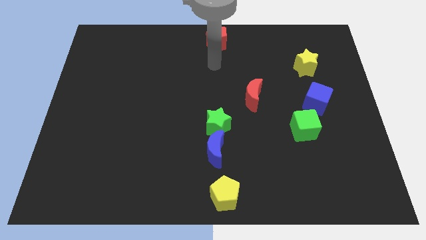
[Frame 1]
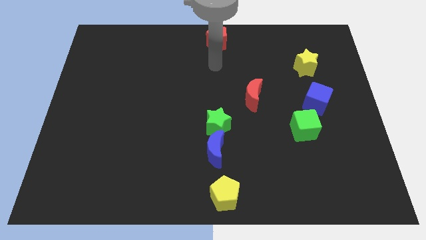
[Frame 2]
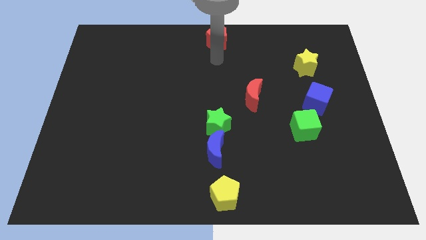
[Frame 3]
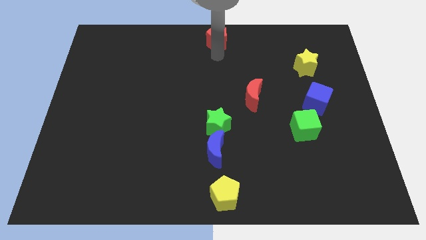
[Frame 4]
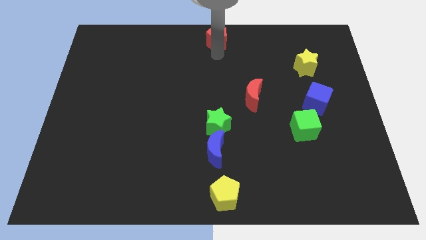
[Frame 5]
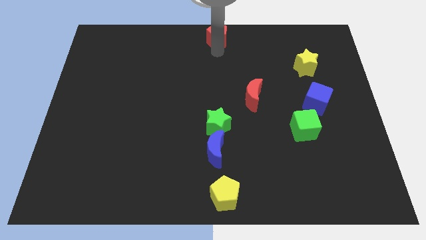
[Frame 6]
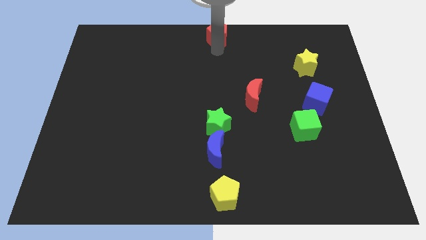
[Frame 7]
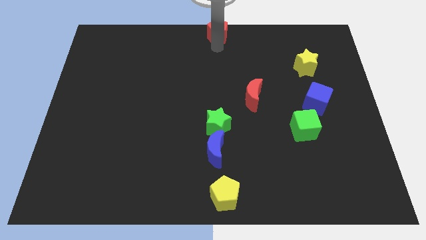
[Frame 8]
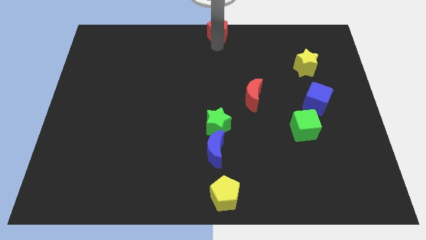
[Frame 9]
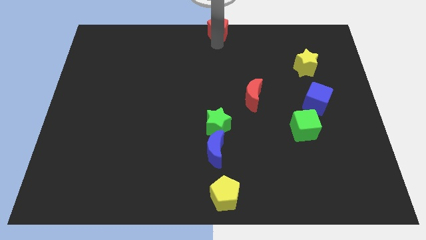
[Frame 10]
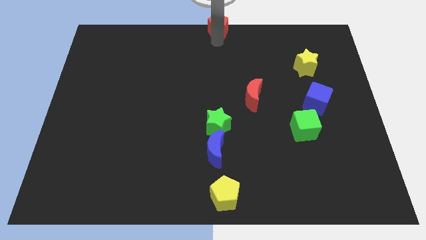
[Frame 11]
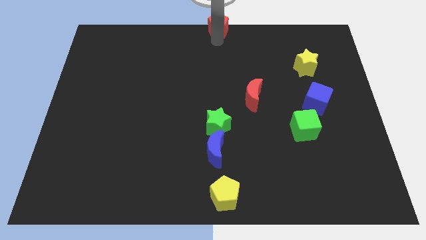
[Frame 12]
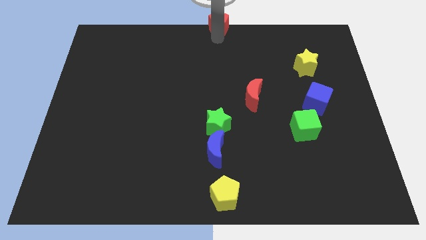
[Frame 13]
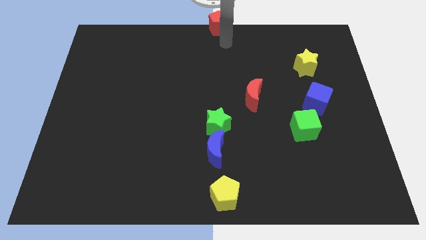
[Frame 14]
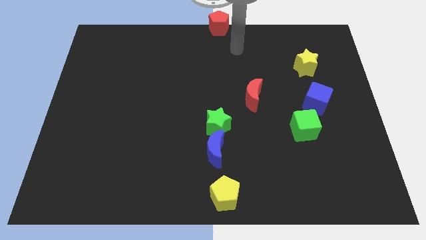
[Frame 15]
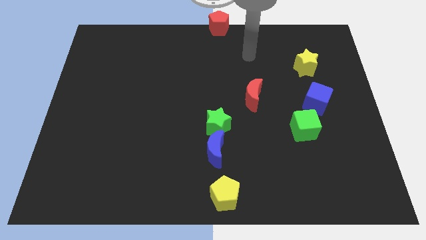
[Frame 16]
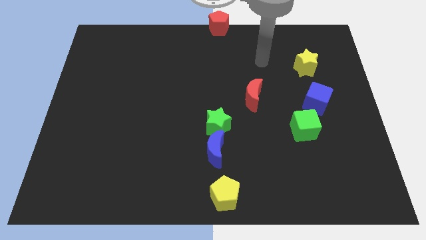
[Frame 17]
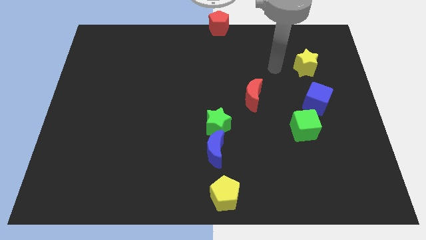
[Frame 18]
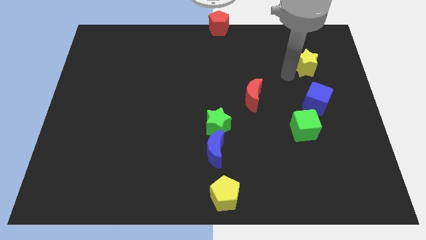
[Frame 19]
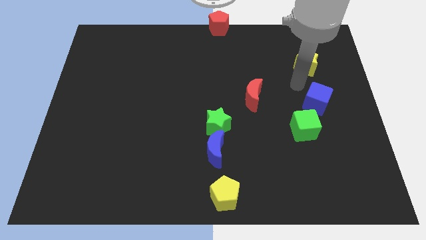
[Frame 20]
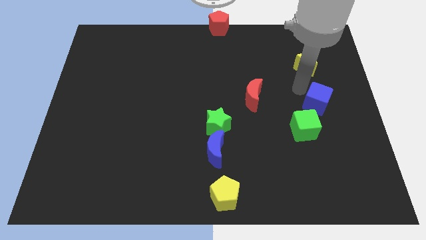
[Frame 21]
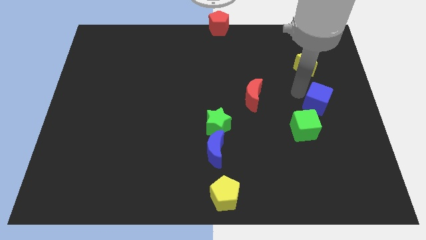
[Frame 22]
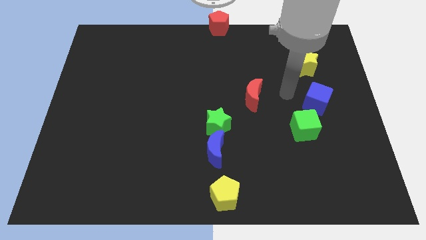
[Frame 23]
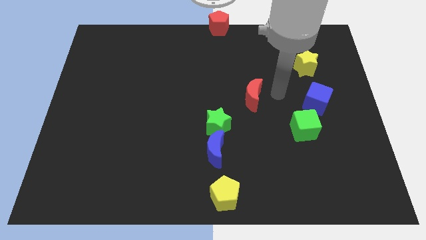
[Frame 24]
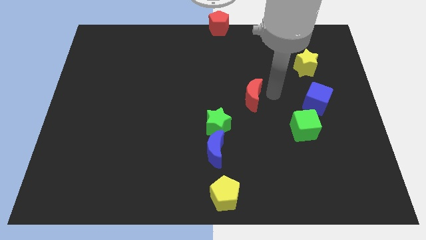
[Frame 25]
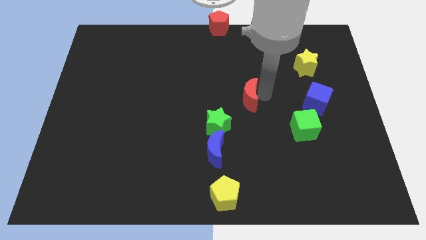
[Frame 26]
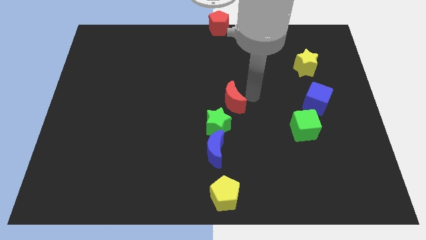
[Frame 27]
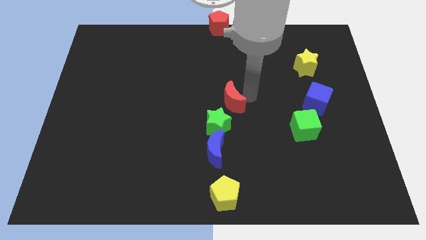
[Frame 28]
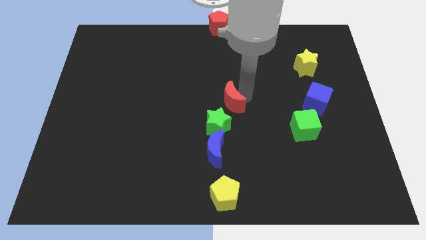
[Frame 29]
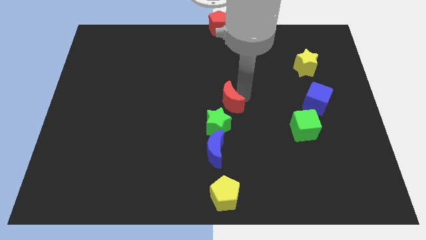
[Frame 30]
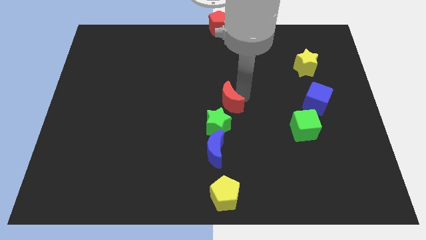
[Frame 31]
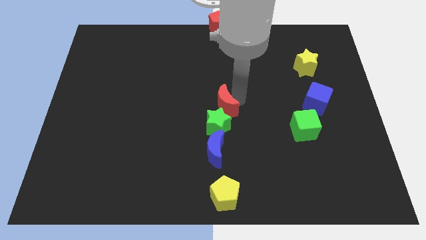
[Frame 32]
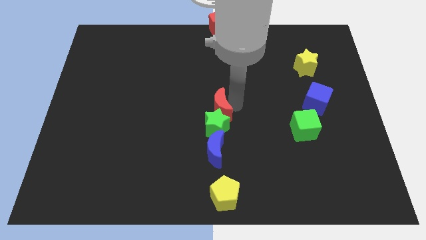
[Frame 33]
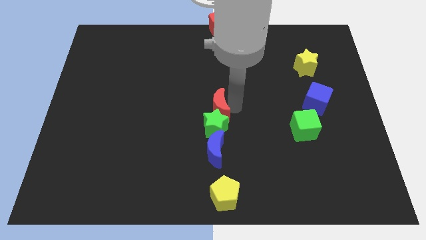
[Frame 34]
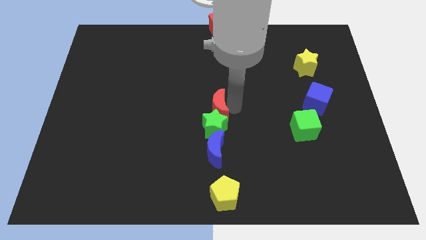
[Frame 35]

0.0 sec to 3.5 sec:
move the red moon into the green star

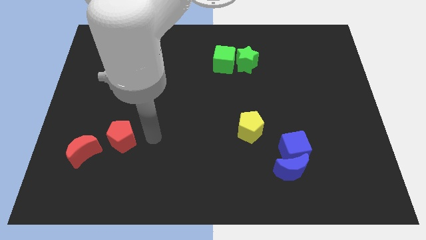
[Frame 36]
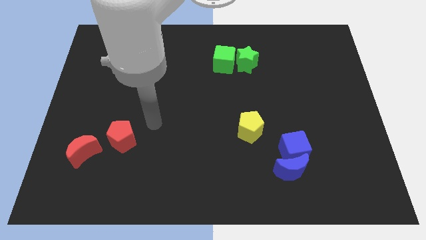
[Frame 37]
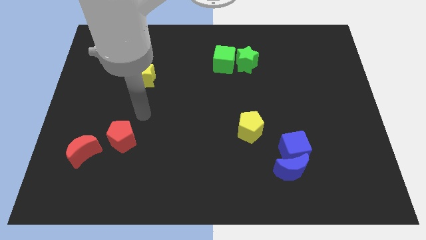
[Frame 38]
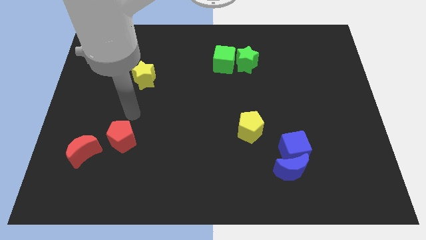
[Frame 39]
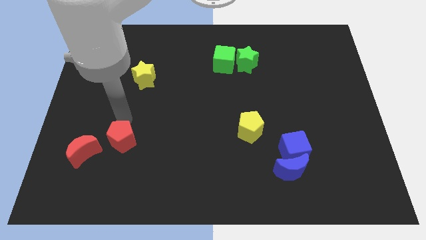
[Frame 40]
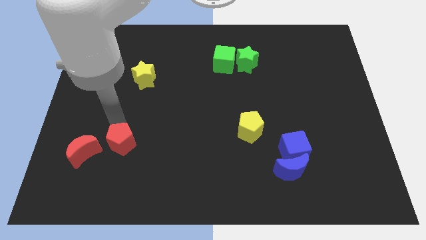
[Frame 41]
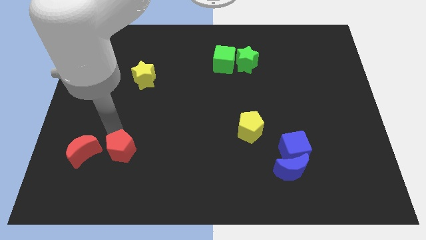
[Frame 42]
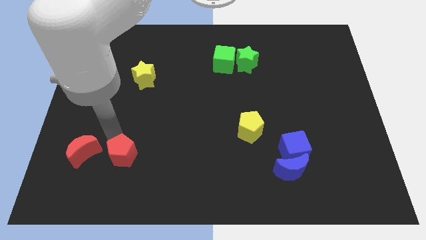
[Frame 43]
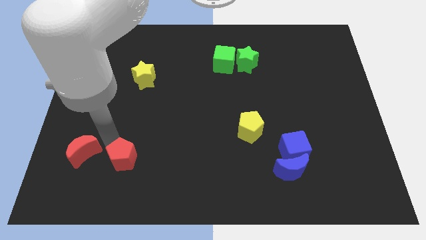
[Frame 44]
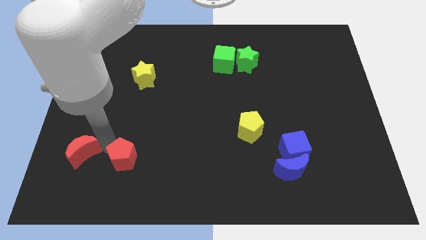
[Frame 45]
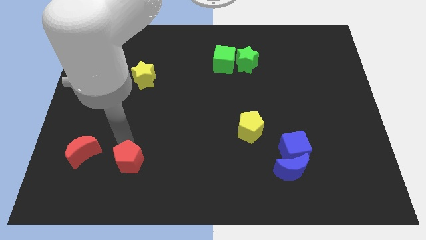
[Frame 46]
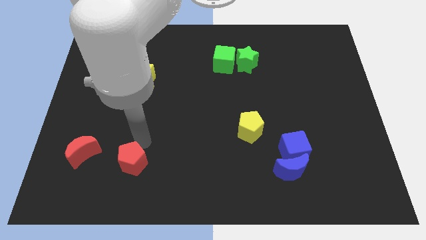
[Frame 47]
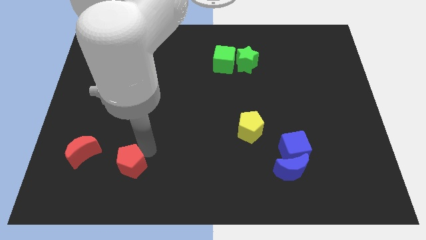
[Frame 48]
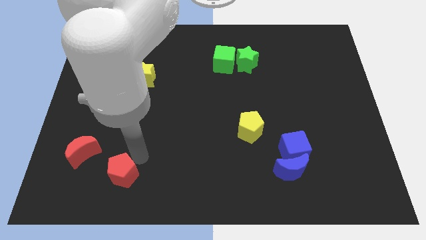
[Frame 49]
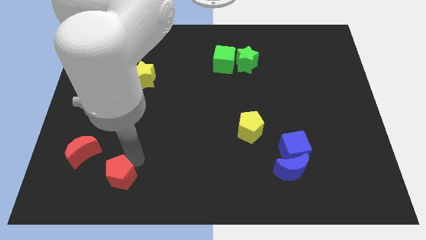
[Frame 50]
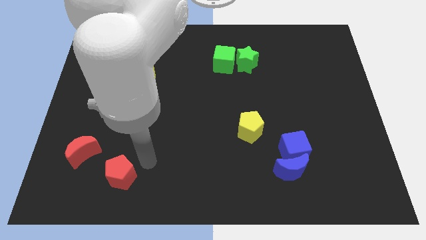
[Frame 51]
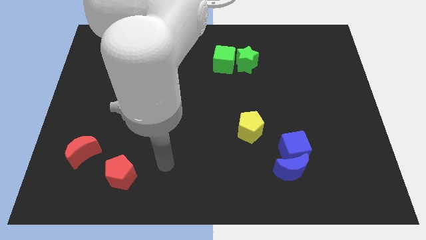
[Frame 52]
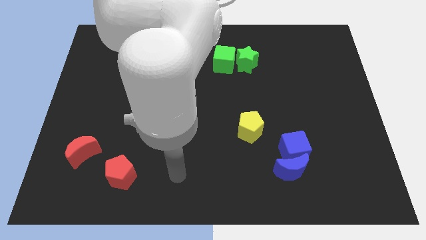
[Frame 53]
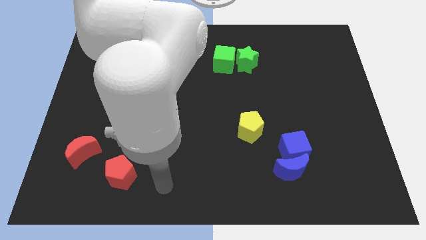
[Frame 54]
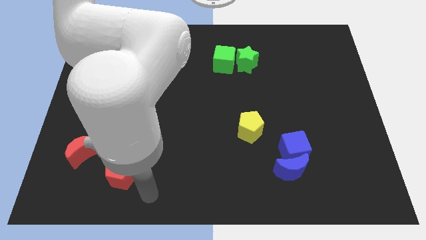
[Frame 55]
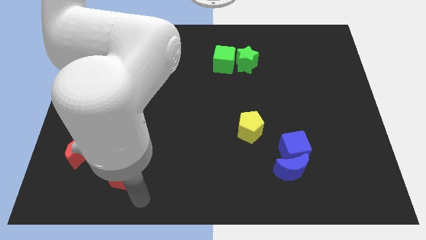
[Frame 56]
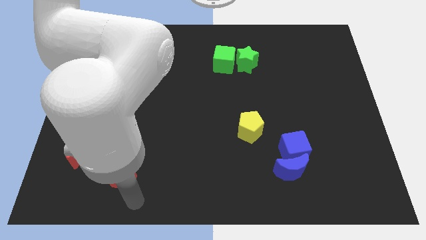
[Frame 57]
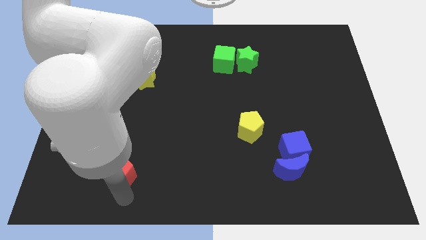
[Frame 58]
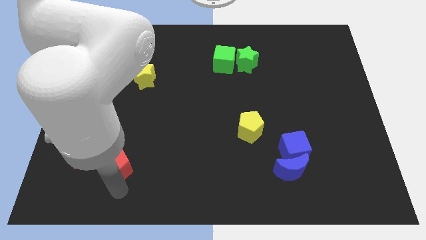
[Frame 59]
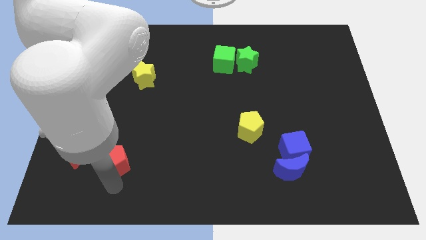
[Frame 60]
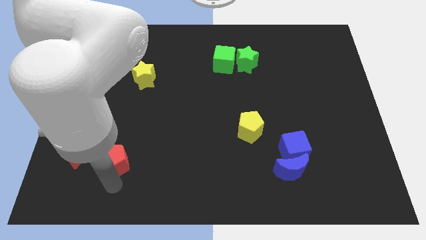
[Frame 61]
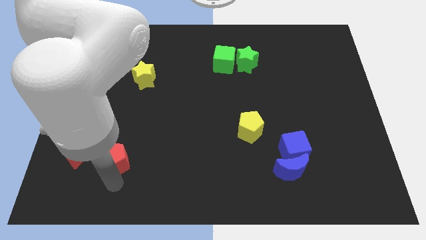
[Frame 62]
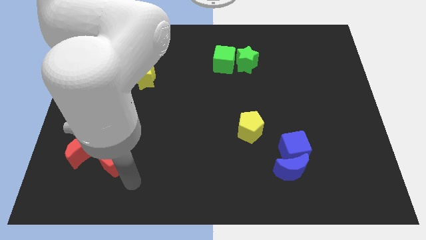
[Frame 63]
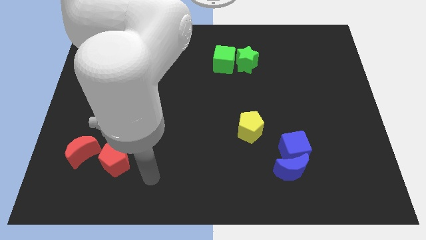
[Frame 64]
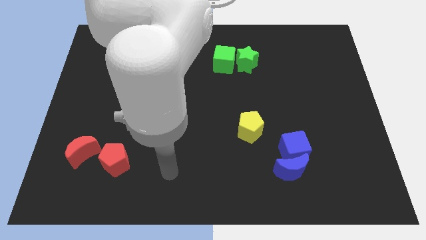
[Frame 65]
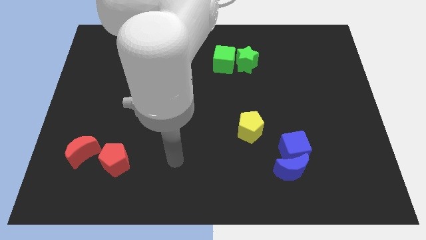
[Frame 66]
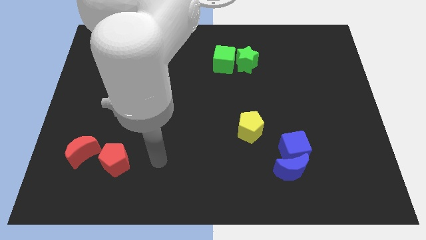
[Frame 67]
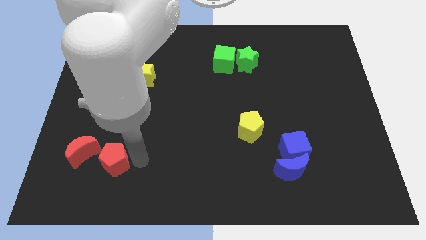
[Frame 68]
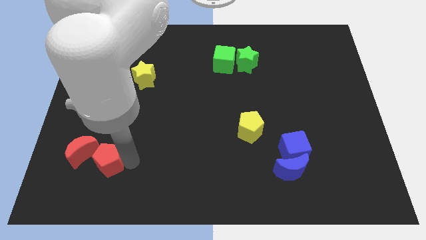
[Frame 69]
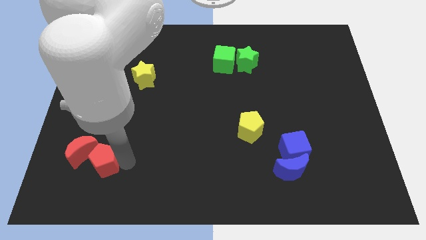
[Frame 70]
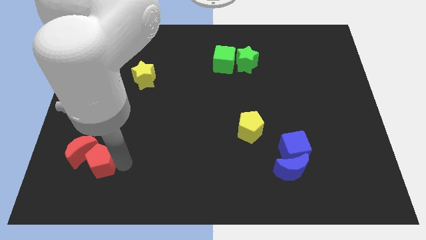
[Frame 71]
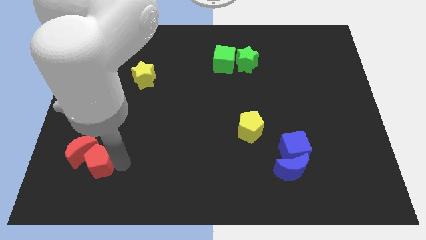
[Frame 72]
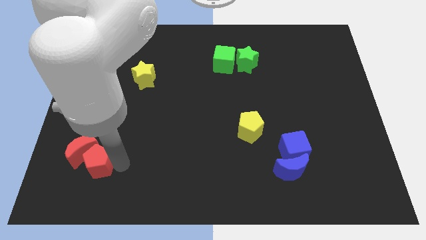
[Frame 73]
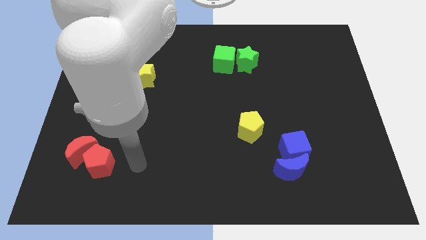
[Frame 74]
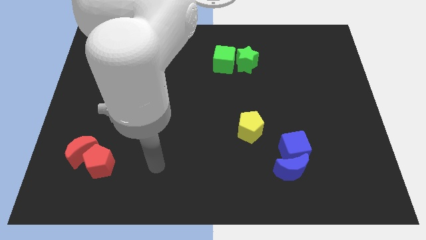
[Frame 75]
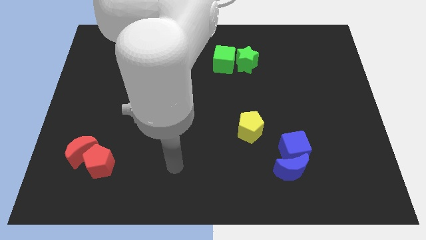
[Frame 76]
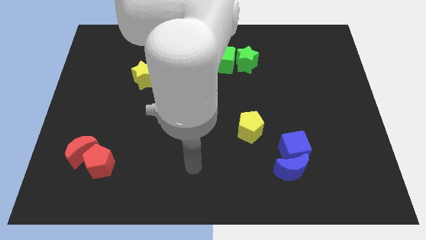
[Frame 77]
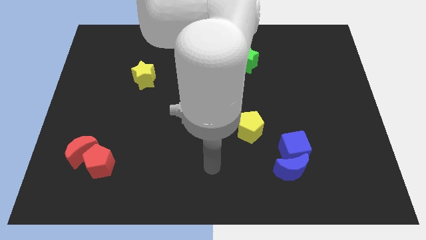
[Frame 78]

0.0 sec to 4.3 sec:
move the red pentagon below the red moon

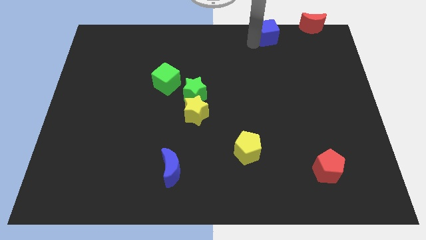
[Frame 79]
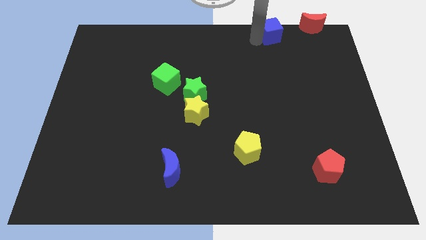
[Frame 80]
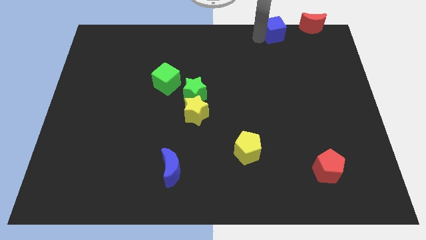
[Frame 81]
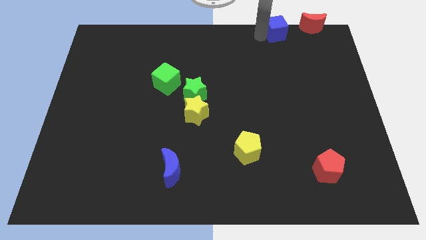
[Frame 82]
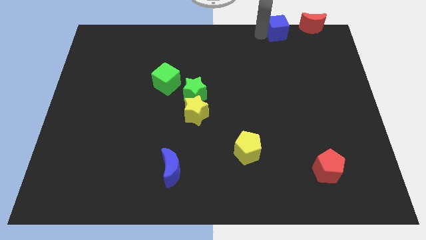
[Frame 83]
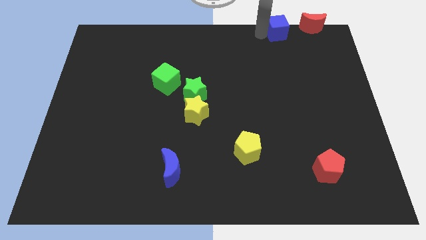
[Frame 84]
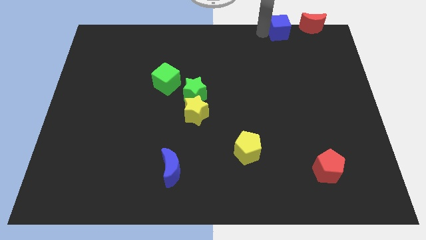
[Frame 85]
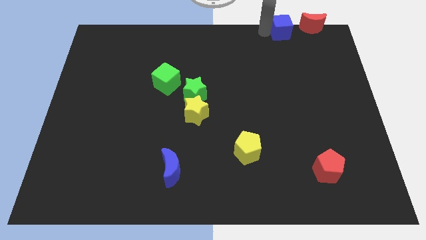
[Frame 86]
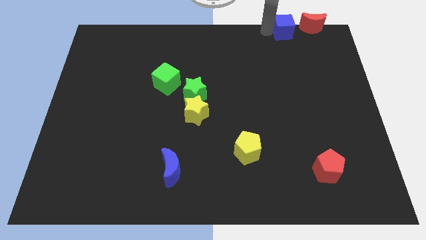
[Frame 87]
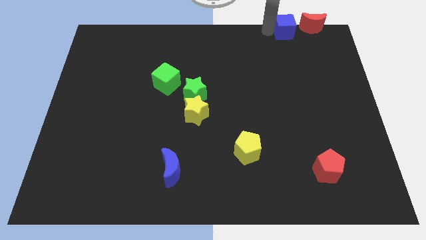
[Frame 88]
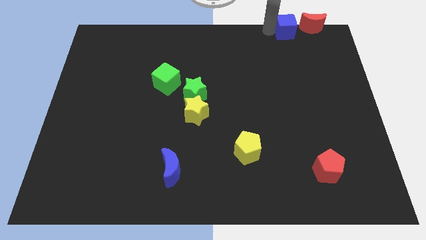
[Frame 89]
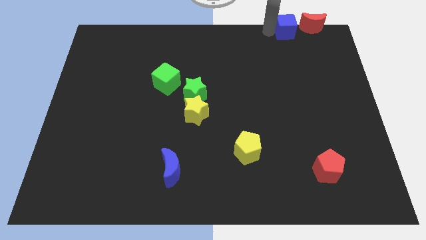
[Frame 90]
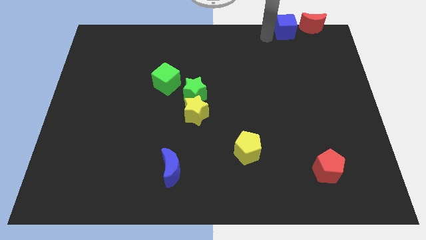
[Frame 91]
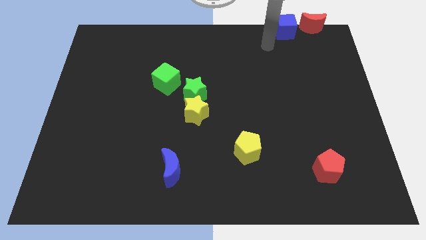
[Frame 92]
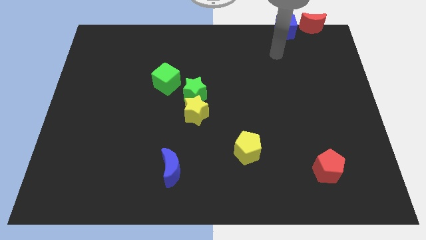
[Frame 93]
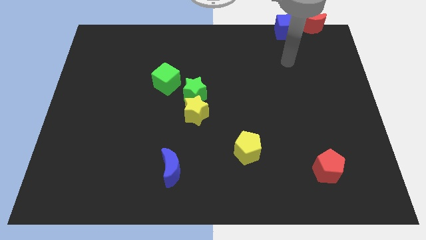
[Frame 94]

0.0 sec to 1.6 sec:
place blue cube to the left of the red moon
